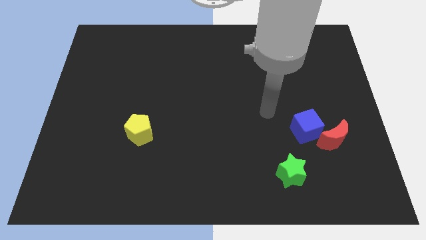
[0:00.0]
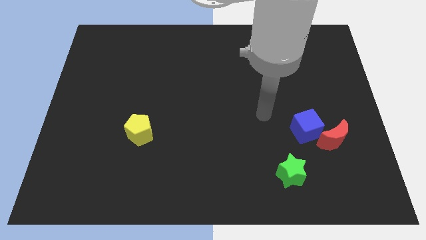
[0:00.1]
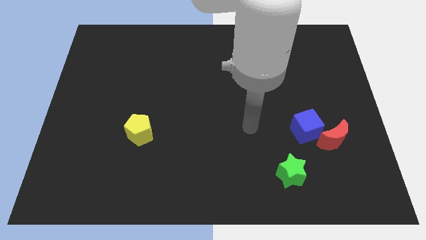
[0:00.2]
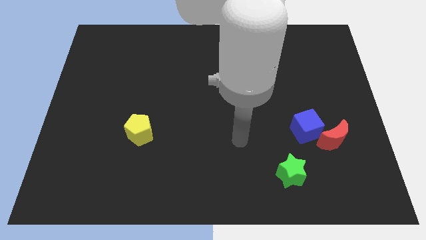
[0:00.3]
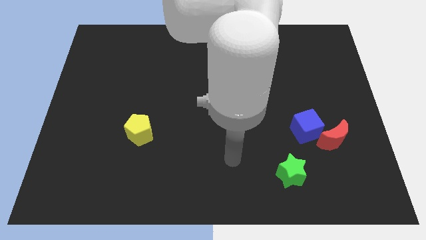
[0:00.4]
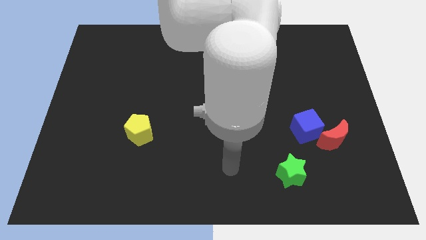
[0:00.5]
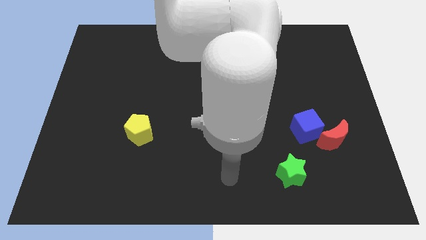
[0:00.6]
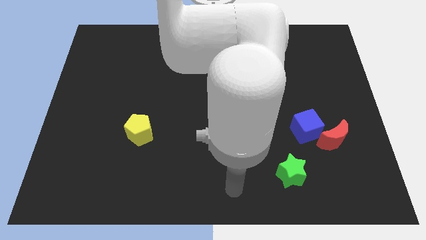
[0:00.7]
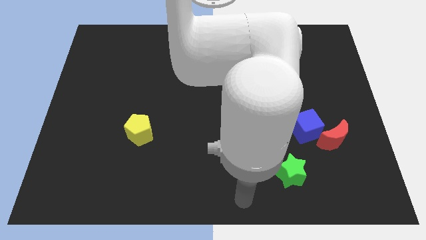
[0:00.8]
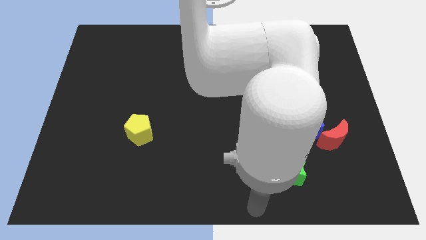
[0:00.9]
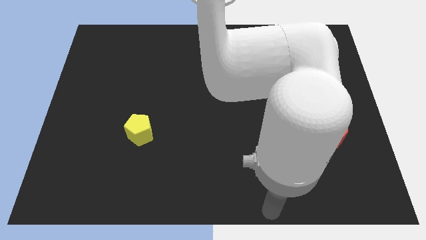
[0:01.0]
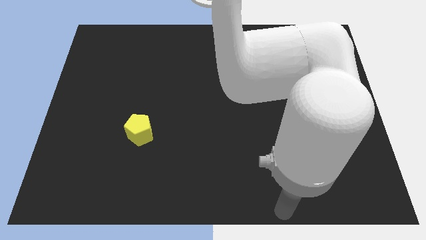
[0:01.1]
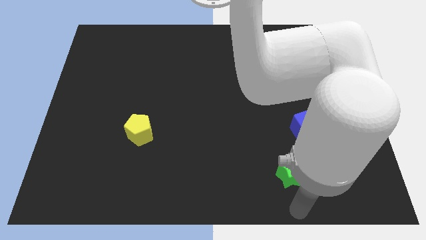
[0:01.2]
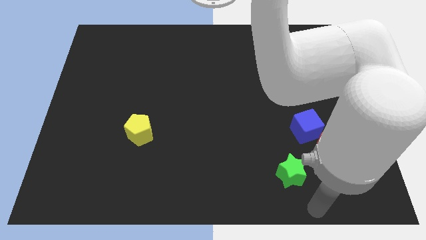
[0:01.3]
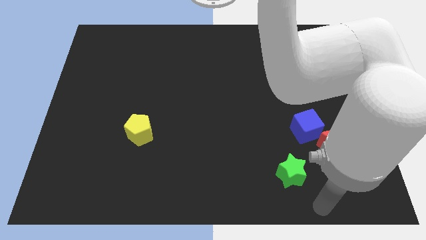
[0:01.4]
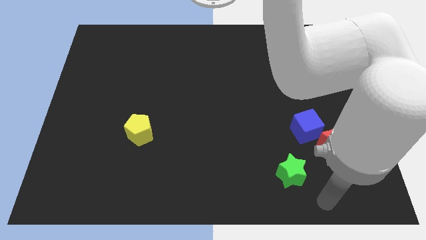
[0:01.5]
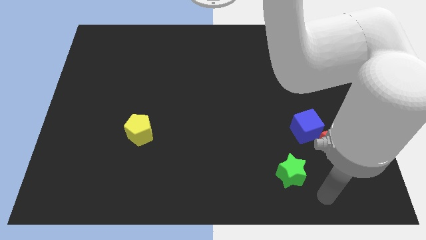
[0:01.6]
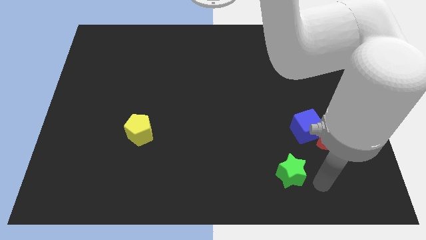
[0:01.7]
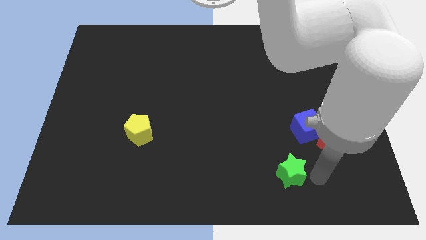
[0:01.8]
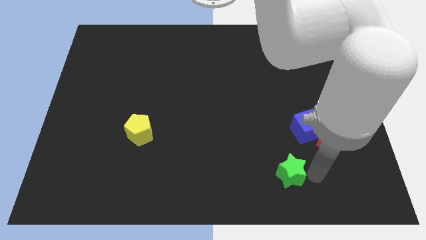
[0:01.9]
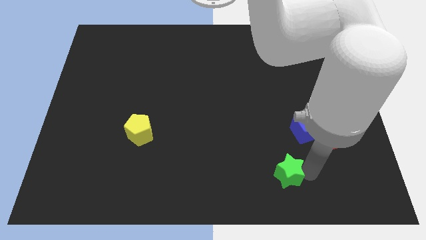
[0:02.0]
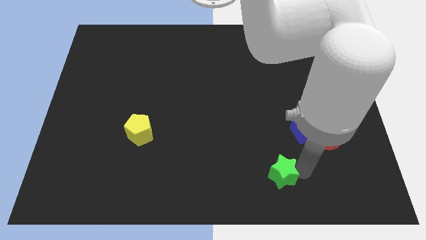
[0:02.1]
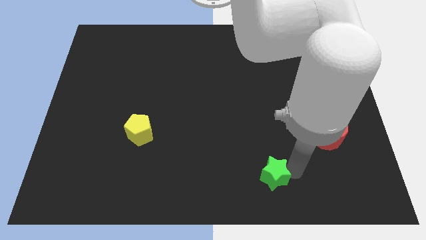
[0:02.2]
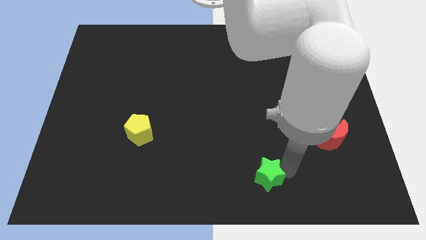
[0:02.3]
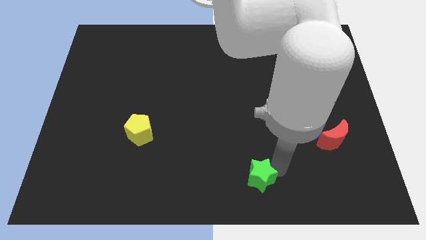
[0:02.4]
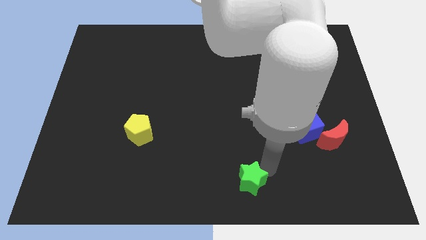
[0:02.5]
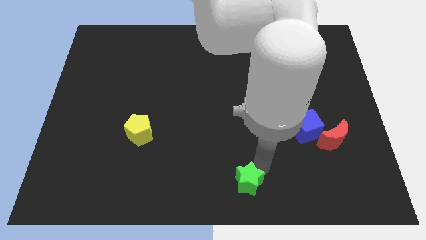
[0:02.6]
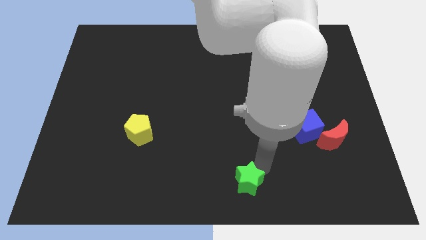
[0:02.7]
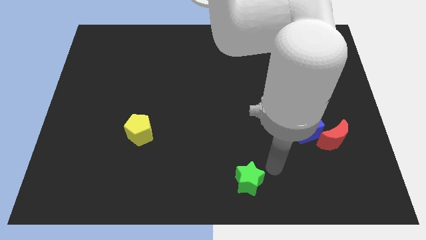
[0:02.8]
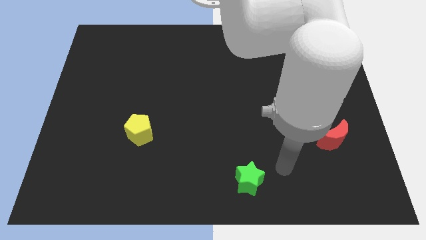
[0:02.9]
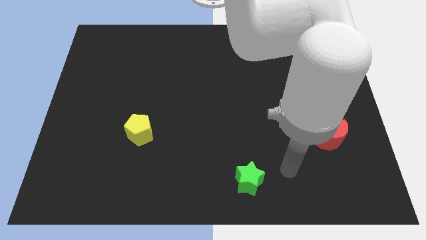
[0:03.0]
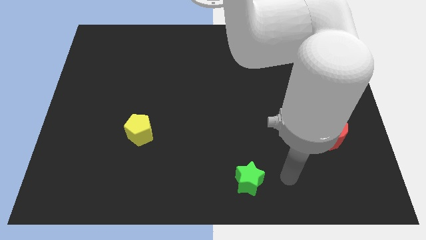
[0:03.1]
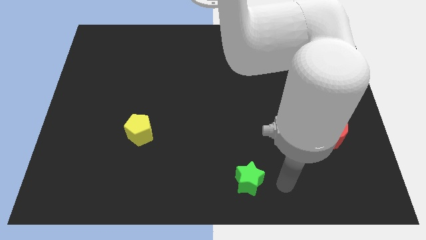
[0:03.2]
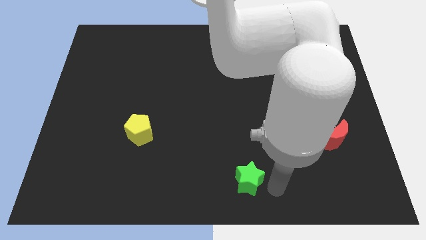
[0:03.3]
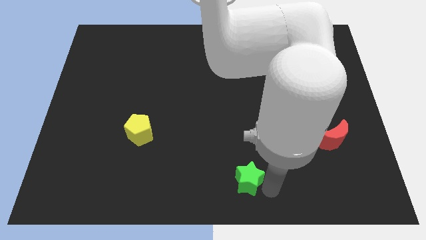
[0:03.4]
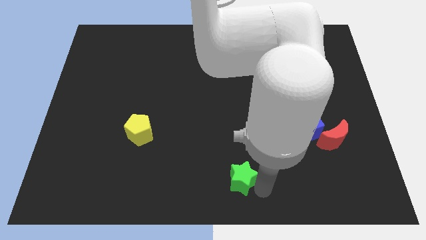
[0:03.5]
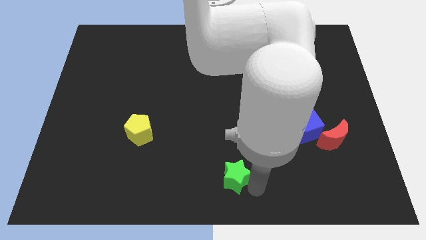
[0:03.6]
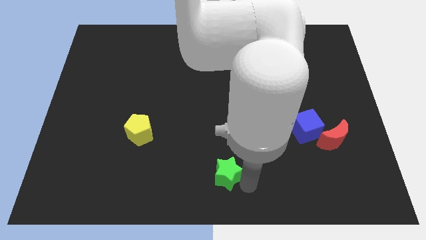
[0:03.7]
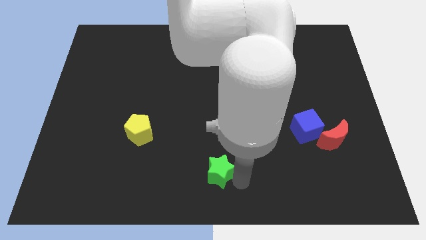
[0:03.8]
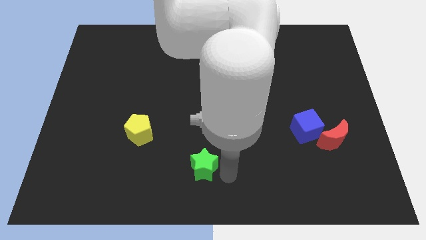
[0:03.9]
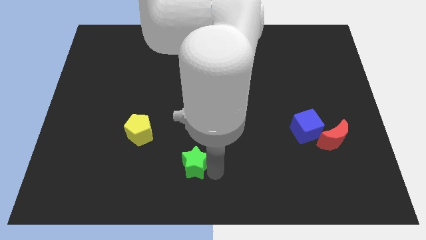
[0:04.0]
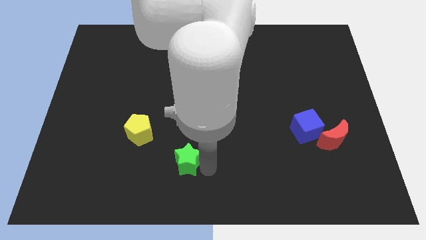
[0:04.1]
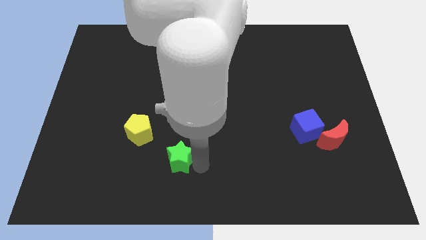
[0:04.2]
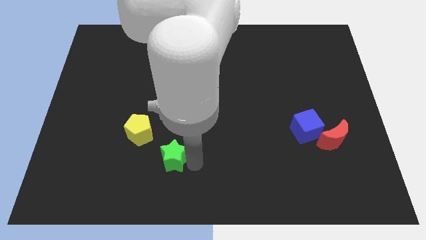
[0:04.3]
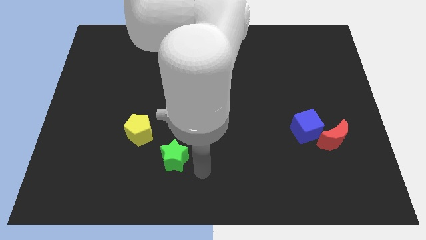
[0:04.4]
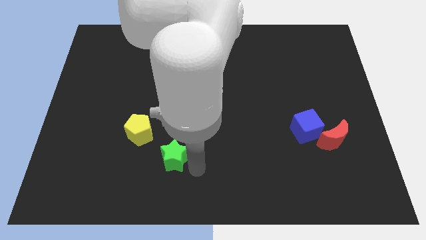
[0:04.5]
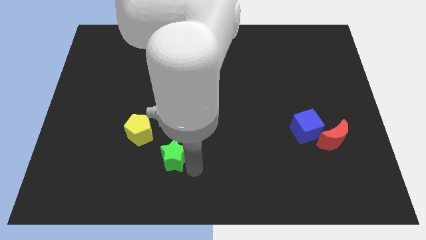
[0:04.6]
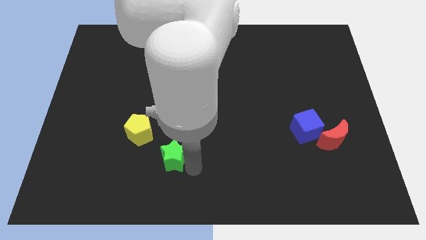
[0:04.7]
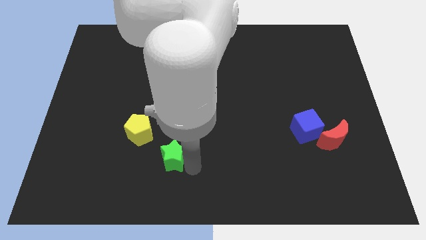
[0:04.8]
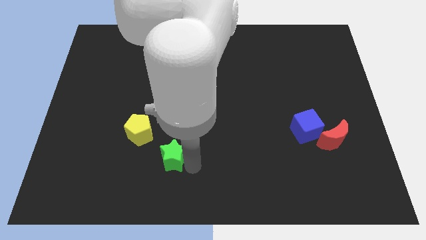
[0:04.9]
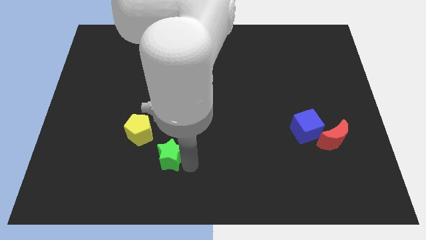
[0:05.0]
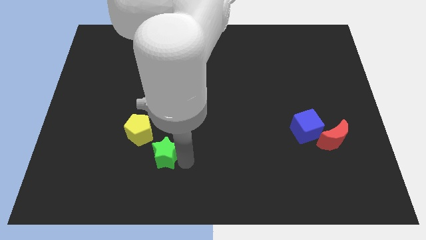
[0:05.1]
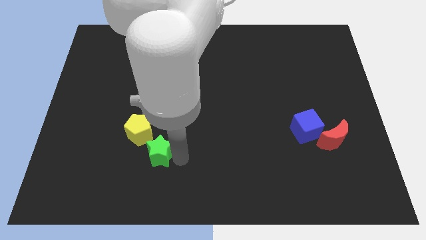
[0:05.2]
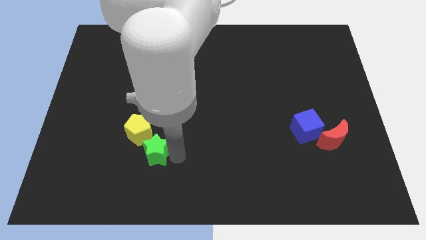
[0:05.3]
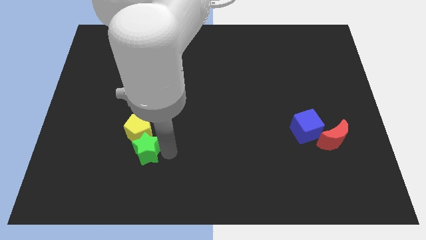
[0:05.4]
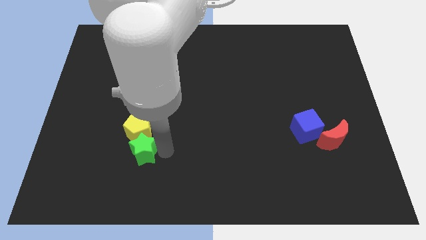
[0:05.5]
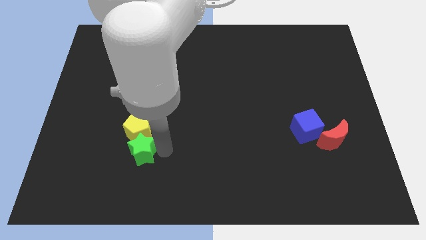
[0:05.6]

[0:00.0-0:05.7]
move the green star next to the yellow block

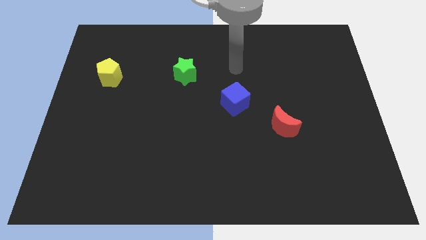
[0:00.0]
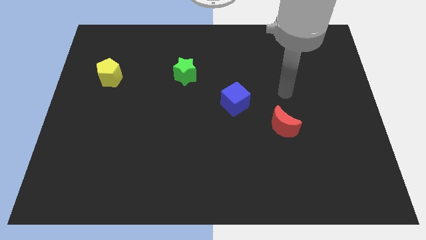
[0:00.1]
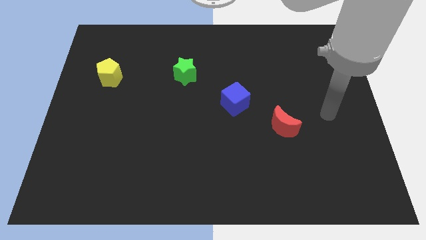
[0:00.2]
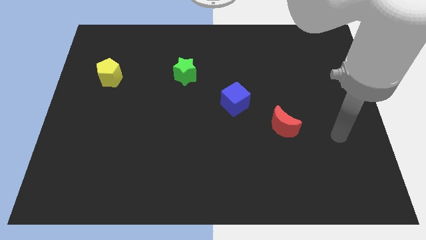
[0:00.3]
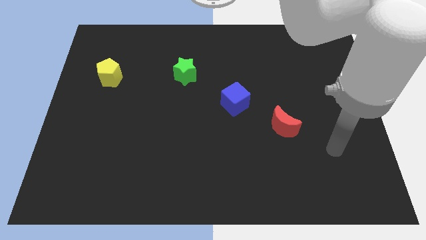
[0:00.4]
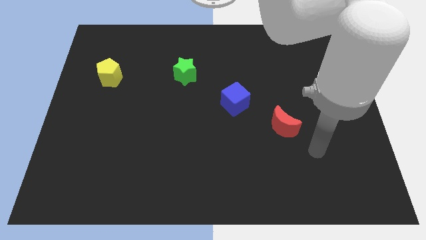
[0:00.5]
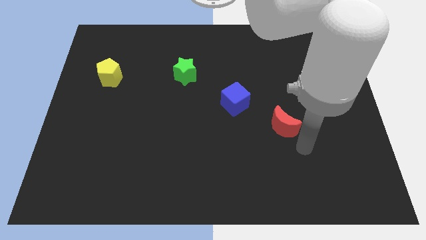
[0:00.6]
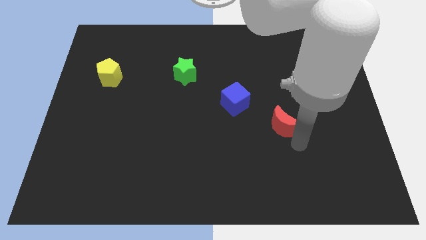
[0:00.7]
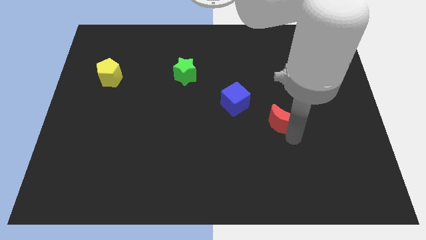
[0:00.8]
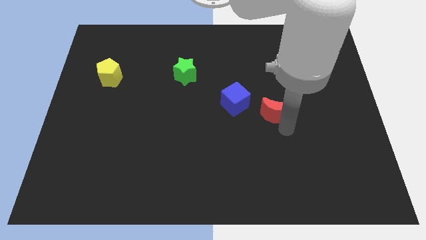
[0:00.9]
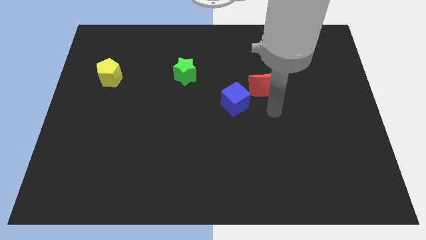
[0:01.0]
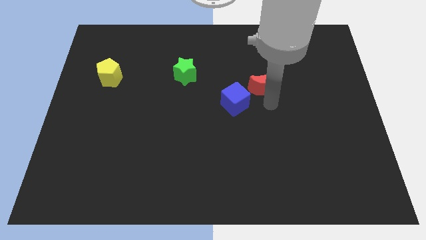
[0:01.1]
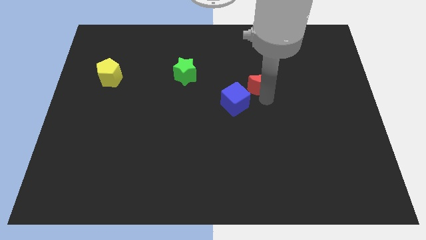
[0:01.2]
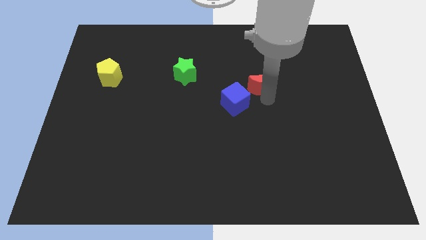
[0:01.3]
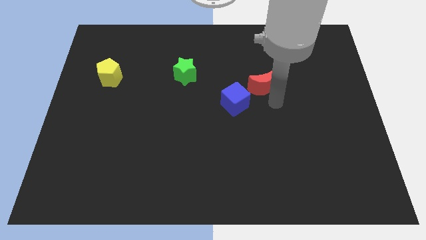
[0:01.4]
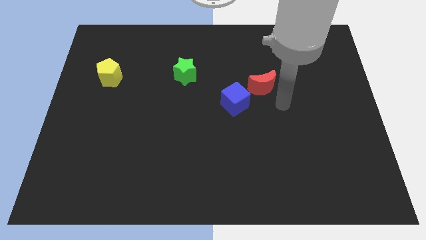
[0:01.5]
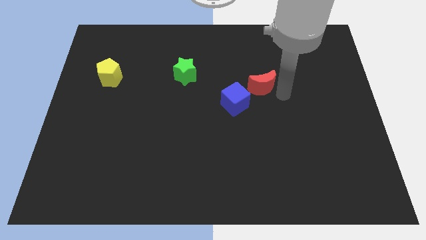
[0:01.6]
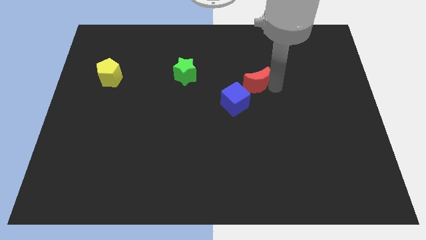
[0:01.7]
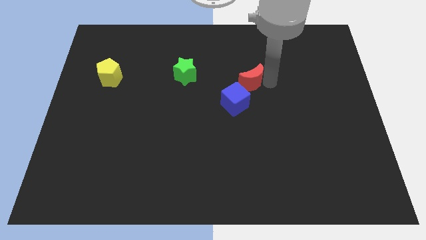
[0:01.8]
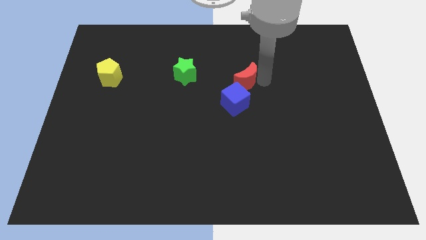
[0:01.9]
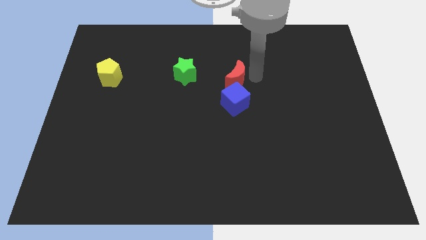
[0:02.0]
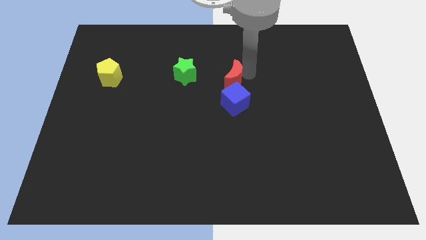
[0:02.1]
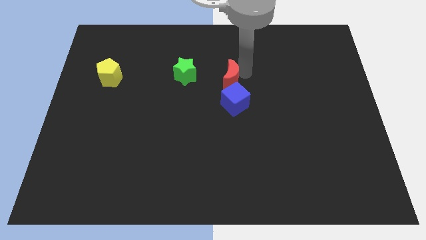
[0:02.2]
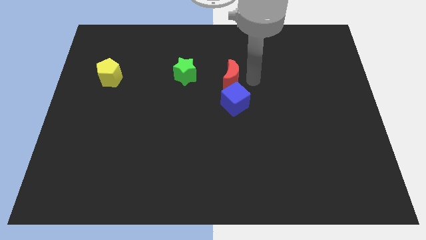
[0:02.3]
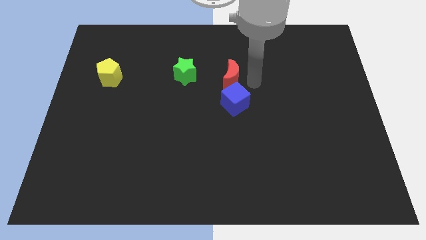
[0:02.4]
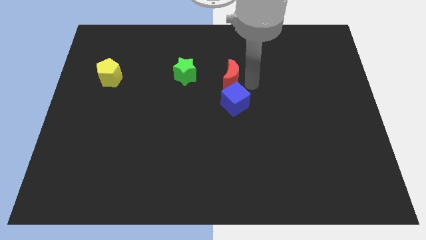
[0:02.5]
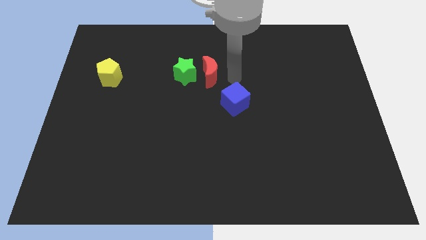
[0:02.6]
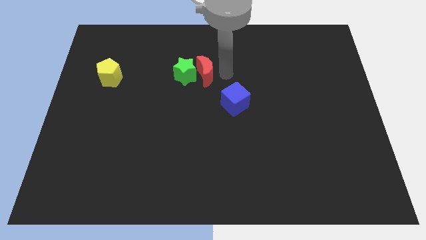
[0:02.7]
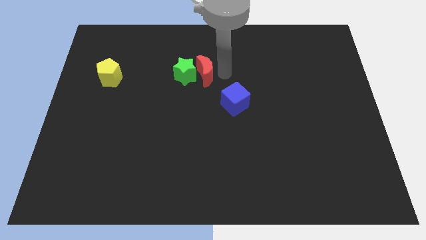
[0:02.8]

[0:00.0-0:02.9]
put the red block towards the green star
